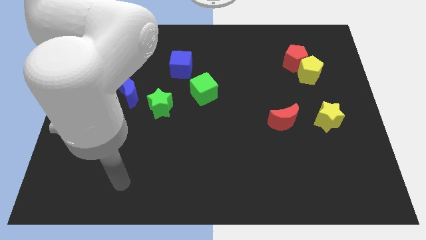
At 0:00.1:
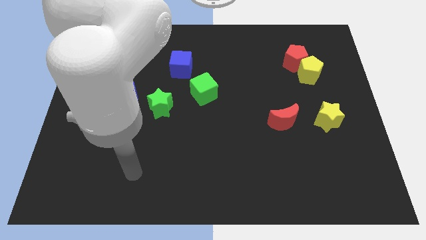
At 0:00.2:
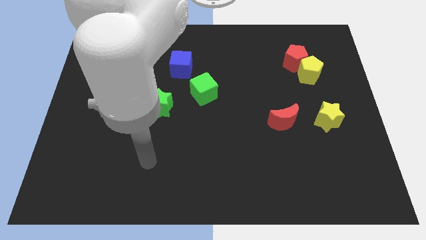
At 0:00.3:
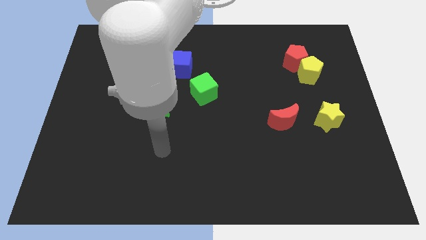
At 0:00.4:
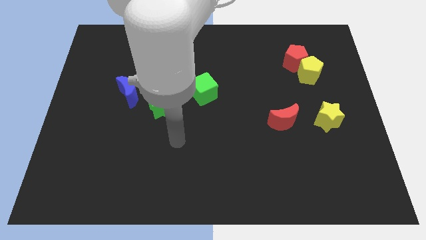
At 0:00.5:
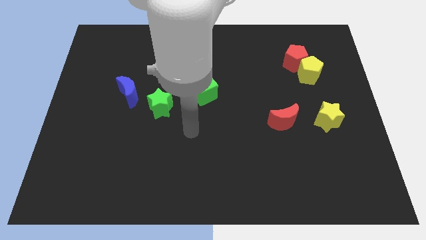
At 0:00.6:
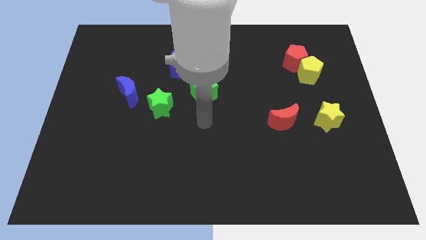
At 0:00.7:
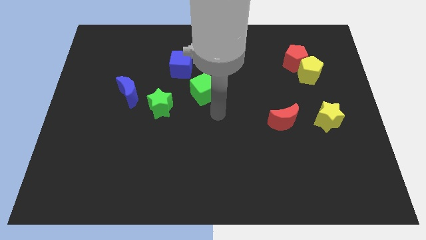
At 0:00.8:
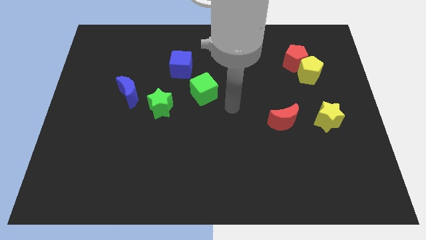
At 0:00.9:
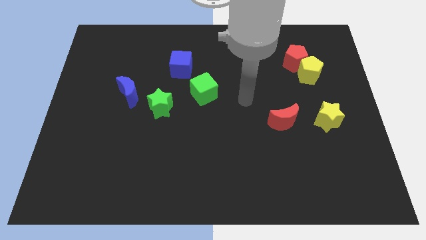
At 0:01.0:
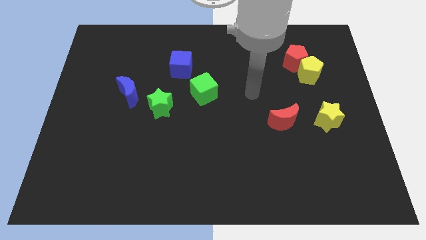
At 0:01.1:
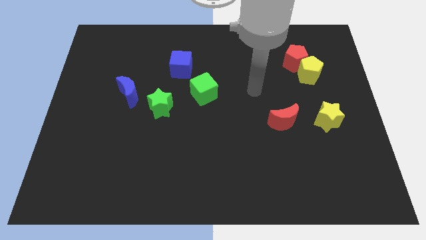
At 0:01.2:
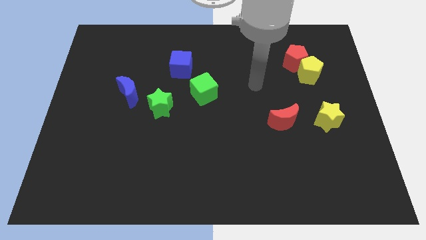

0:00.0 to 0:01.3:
move your arm towards the right side of the green cube

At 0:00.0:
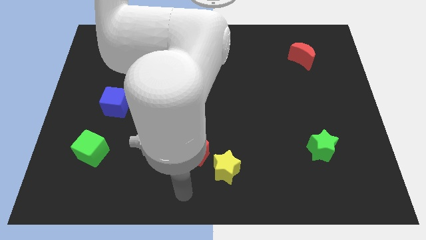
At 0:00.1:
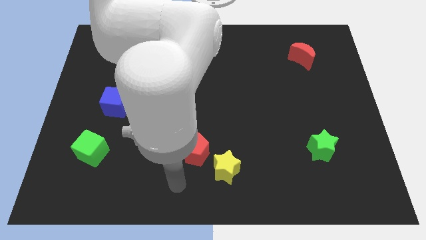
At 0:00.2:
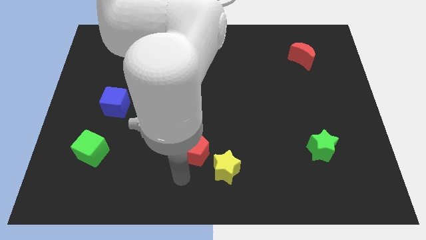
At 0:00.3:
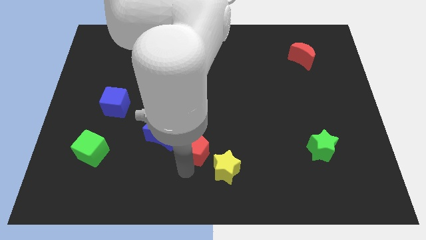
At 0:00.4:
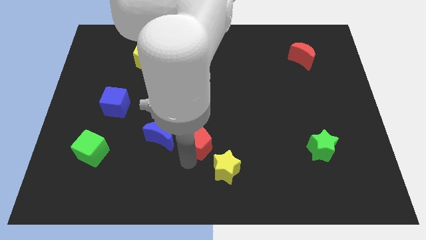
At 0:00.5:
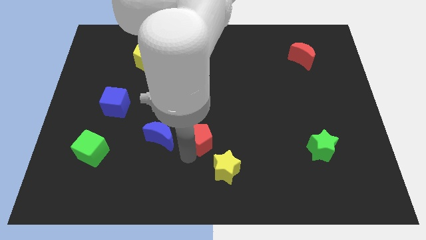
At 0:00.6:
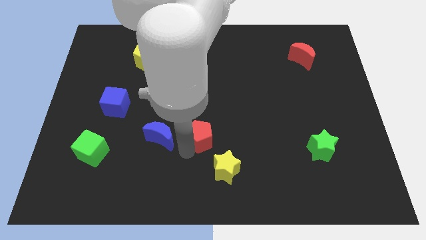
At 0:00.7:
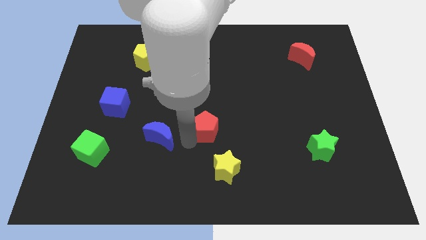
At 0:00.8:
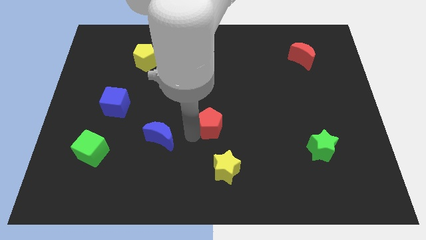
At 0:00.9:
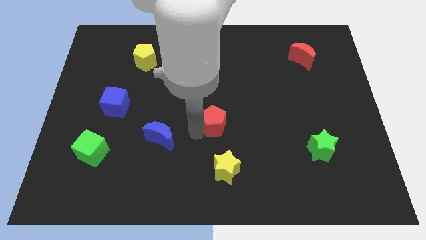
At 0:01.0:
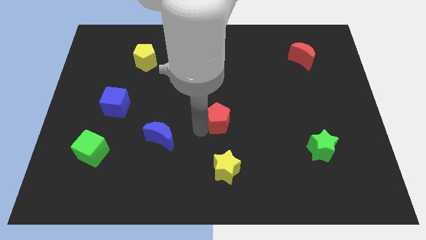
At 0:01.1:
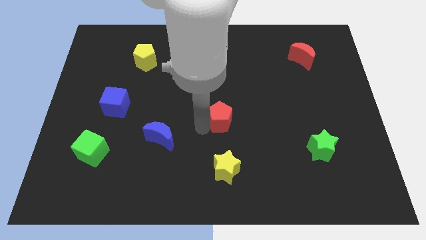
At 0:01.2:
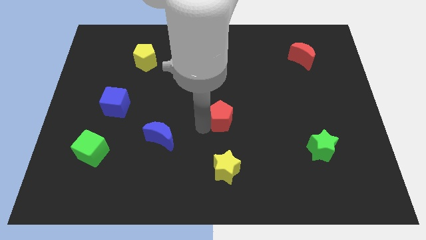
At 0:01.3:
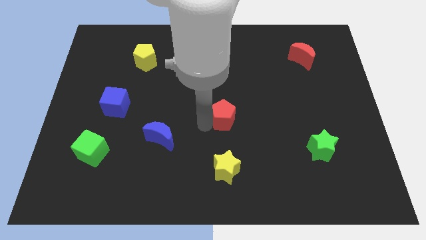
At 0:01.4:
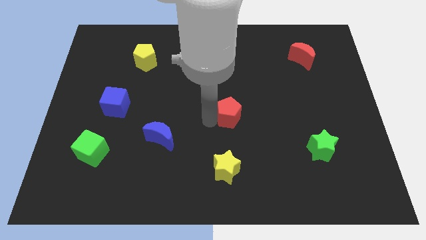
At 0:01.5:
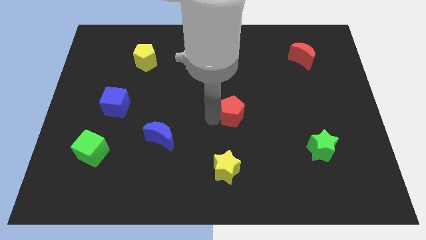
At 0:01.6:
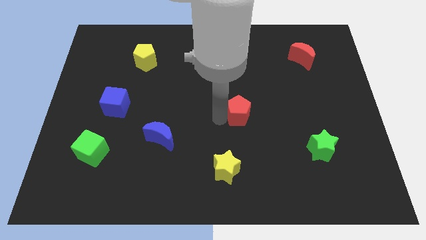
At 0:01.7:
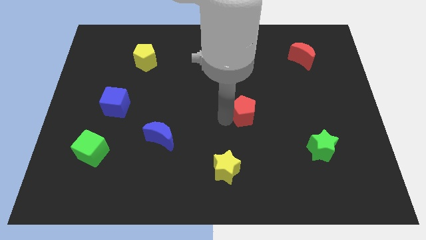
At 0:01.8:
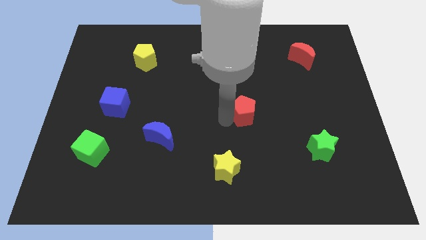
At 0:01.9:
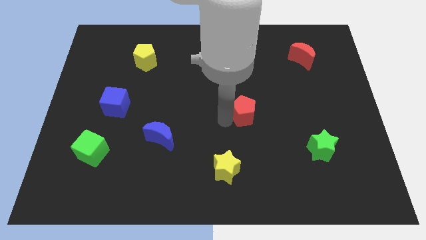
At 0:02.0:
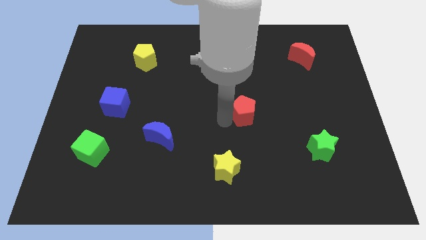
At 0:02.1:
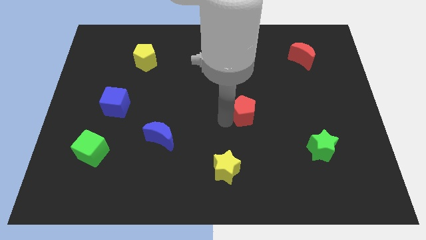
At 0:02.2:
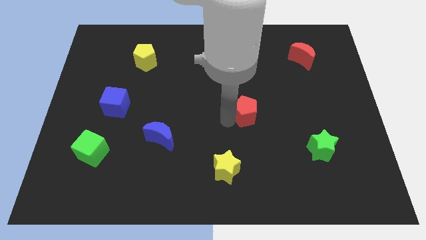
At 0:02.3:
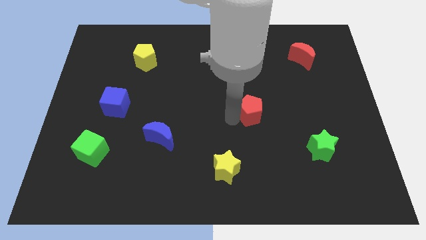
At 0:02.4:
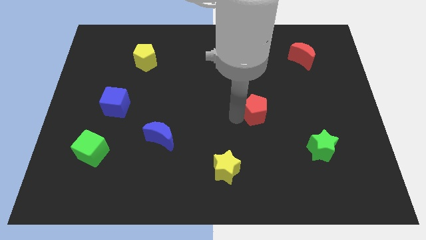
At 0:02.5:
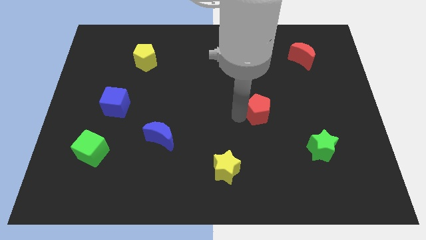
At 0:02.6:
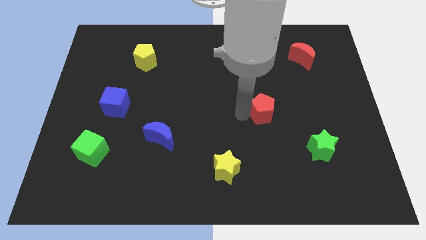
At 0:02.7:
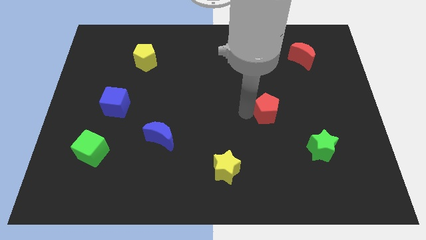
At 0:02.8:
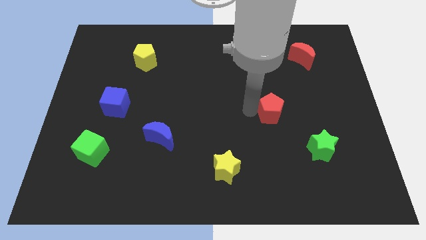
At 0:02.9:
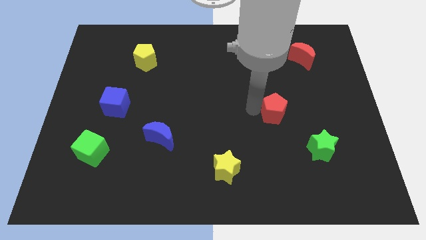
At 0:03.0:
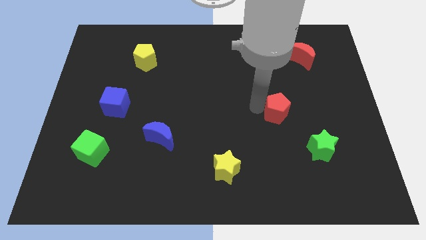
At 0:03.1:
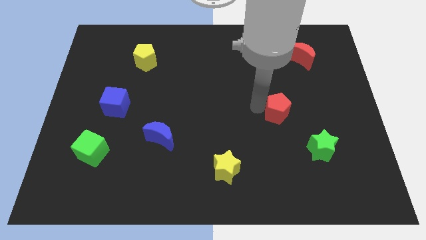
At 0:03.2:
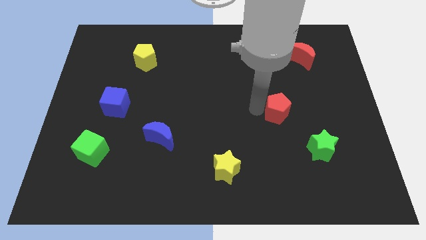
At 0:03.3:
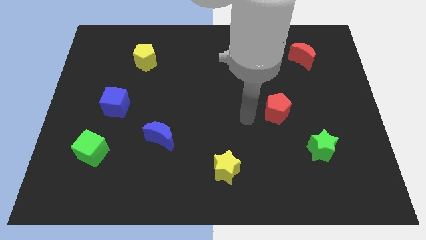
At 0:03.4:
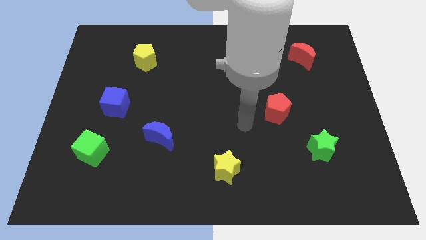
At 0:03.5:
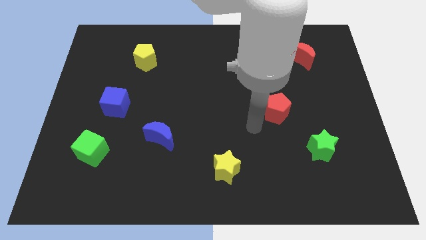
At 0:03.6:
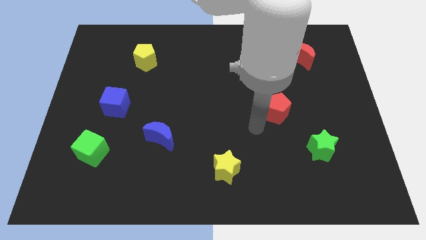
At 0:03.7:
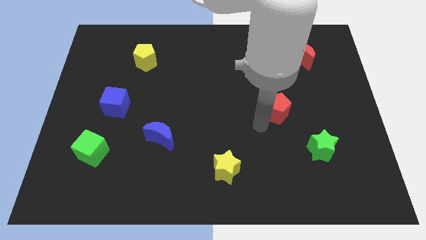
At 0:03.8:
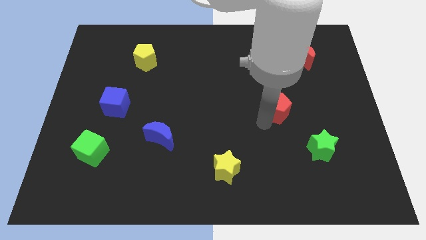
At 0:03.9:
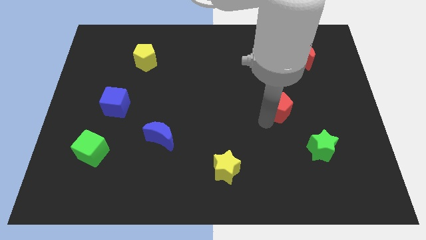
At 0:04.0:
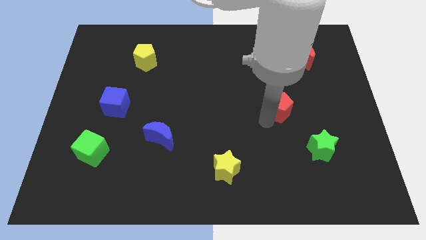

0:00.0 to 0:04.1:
place red pentagon to the top left of green star

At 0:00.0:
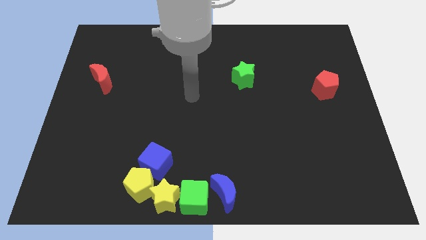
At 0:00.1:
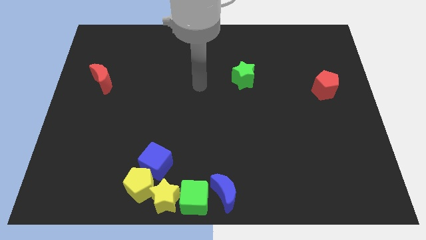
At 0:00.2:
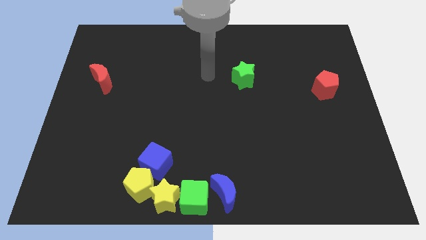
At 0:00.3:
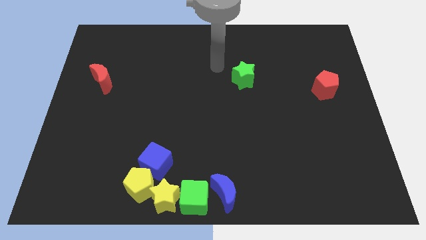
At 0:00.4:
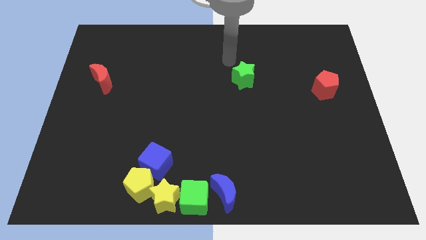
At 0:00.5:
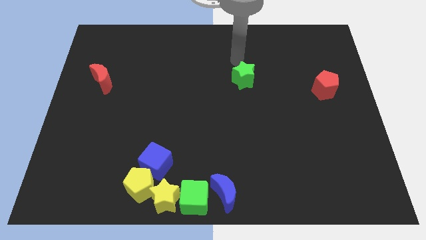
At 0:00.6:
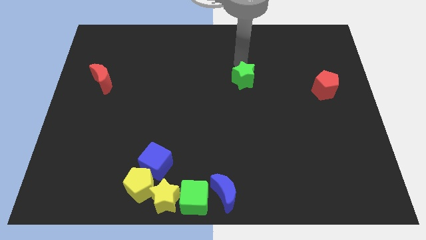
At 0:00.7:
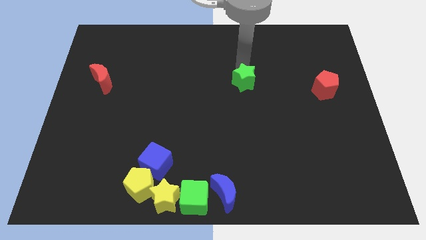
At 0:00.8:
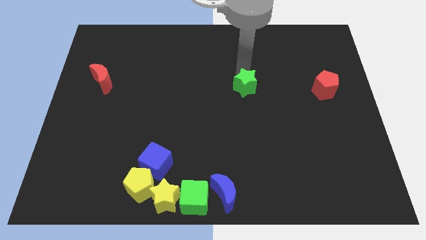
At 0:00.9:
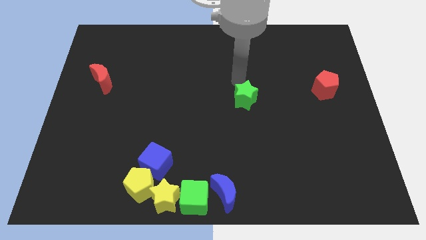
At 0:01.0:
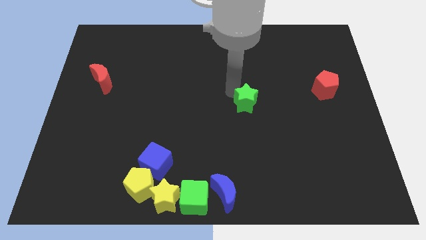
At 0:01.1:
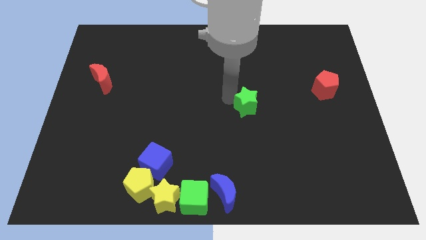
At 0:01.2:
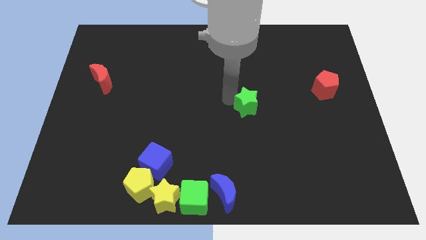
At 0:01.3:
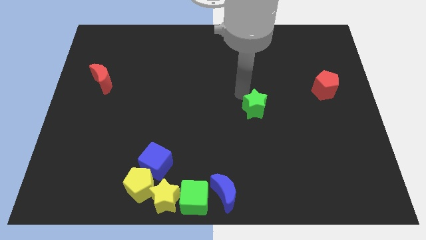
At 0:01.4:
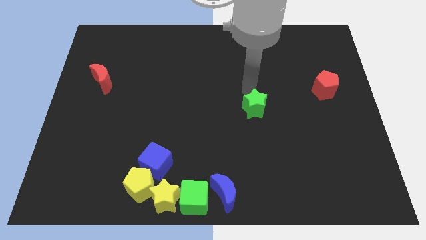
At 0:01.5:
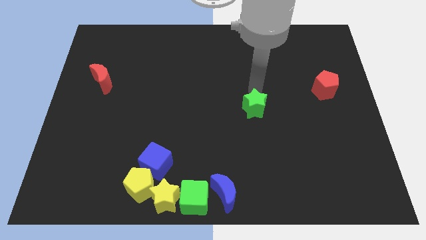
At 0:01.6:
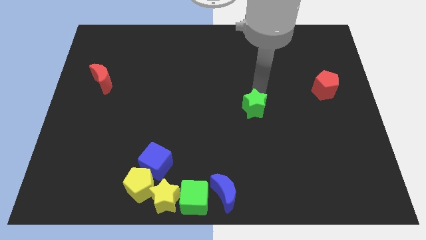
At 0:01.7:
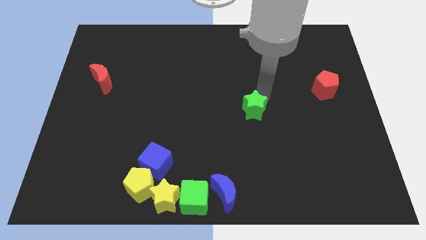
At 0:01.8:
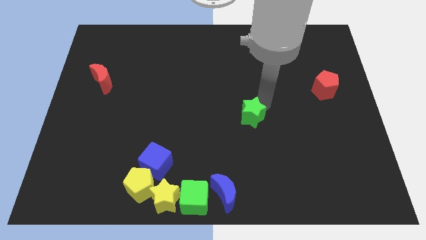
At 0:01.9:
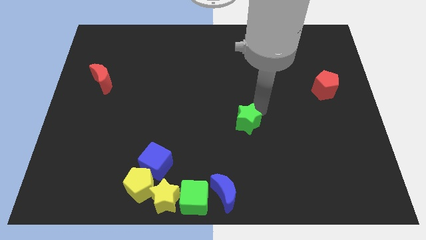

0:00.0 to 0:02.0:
drag the green star towards the bottom center

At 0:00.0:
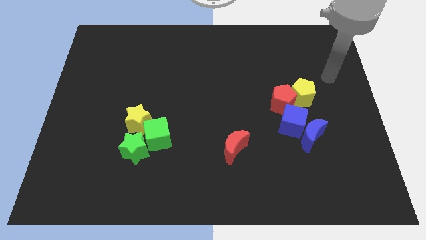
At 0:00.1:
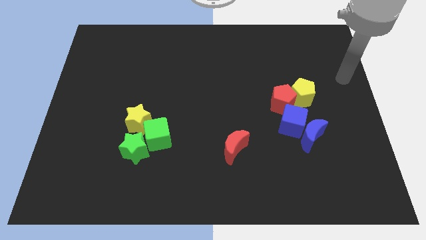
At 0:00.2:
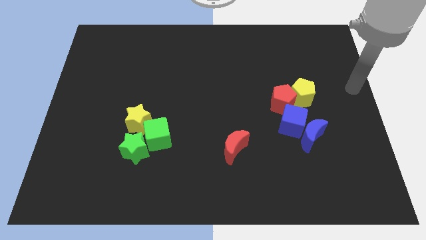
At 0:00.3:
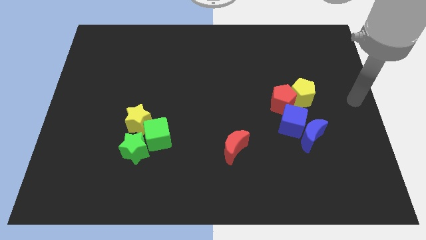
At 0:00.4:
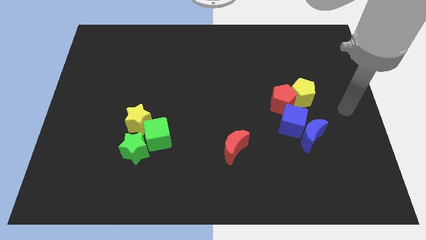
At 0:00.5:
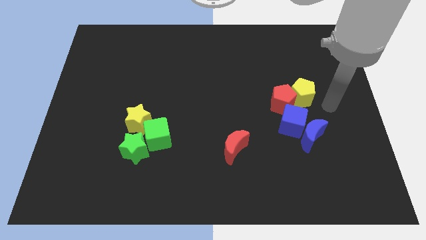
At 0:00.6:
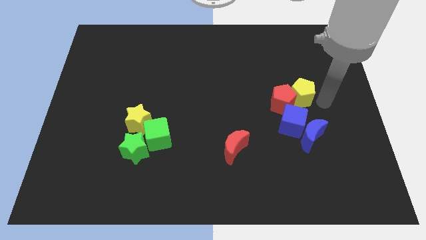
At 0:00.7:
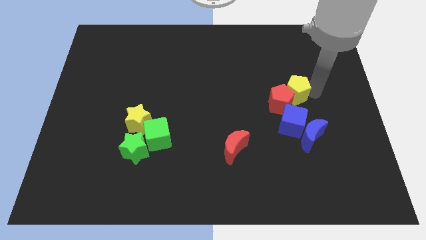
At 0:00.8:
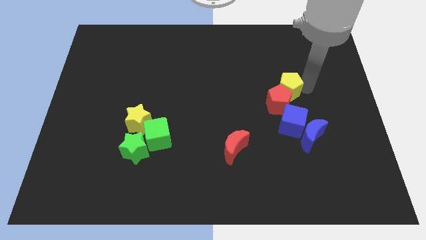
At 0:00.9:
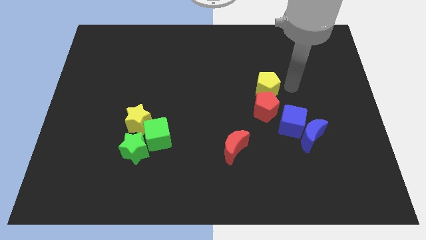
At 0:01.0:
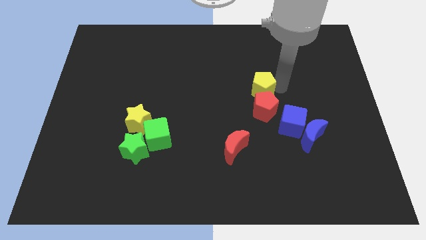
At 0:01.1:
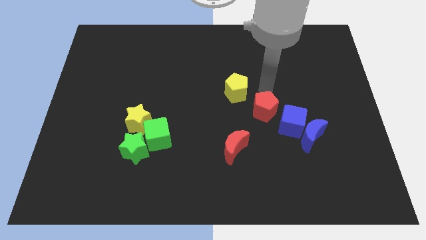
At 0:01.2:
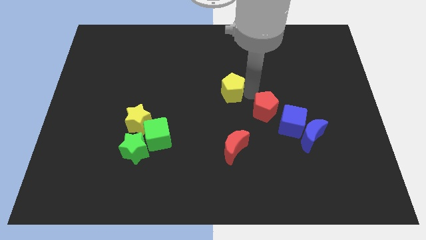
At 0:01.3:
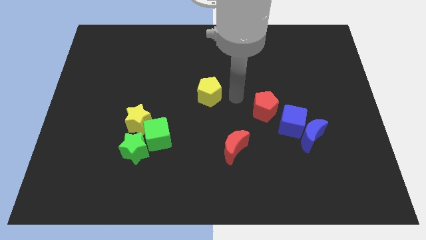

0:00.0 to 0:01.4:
slide the yellow pentagon towards center
